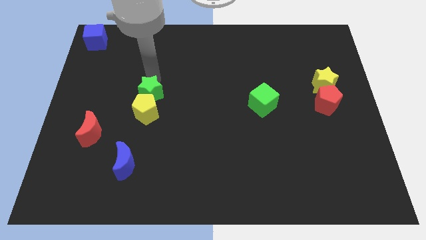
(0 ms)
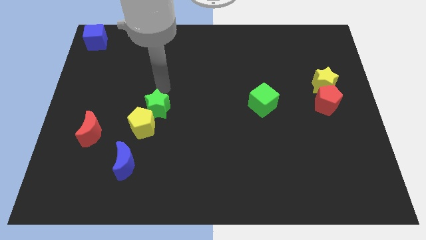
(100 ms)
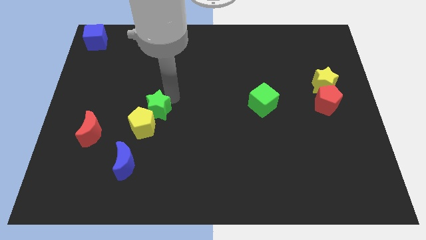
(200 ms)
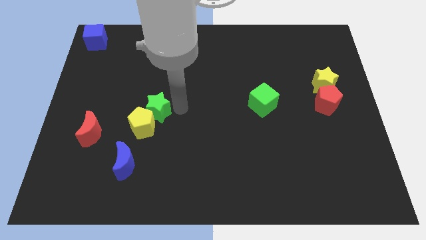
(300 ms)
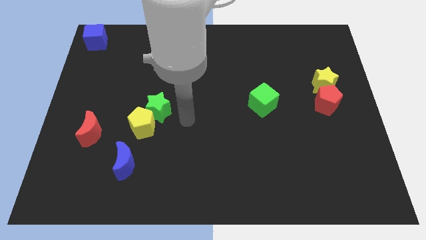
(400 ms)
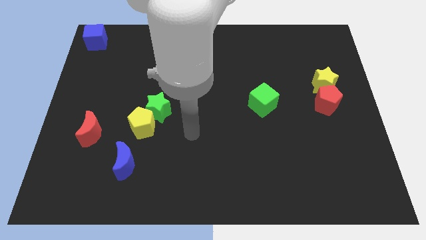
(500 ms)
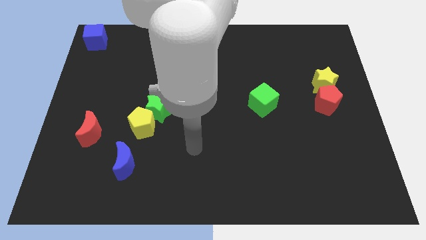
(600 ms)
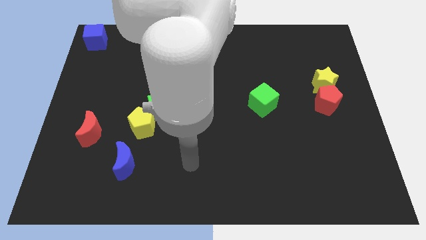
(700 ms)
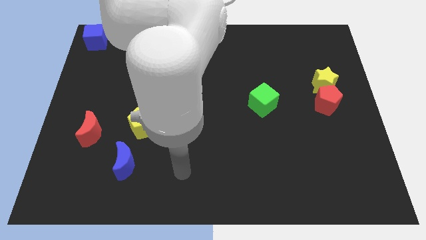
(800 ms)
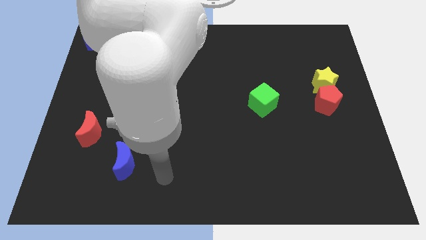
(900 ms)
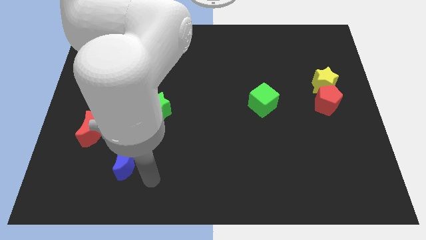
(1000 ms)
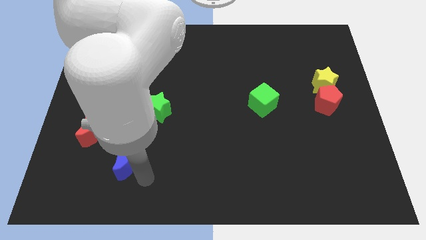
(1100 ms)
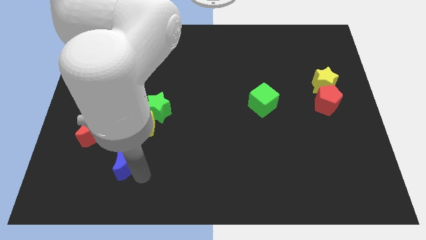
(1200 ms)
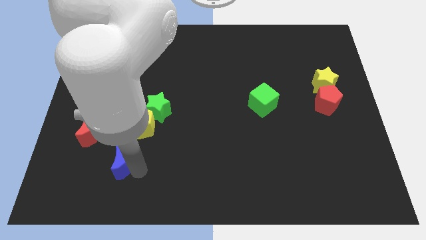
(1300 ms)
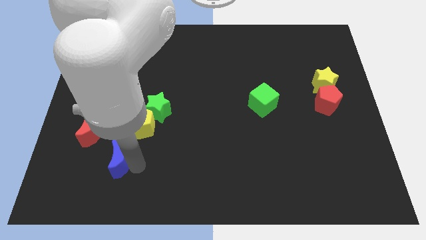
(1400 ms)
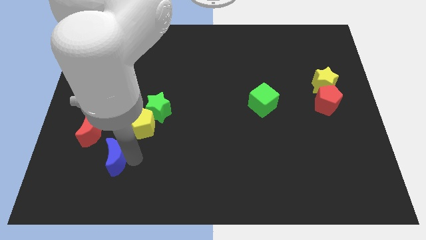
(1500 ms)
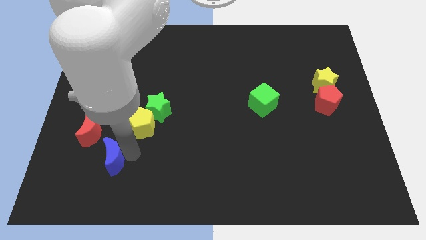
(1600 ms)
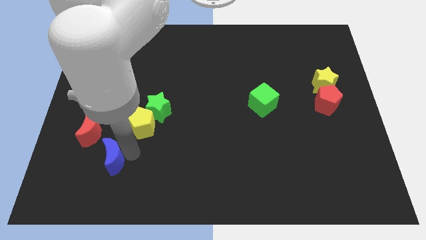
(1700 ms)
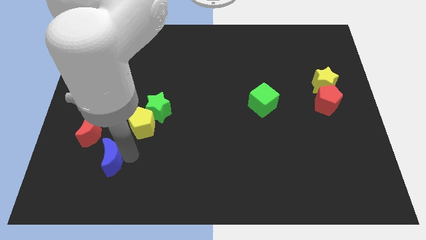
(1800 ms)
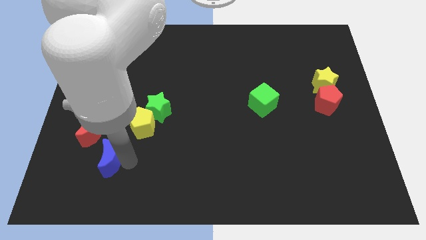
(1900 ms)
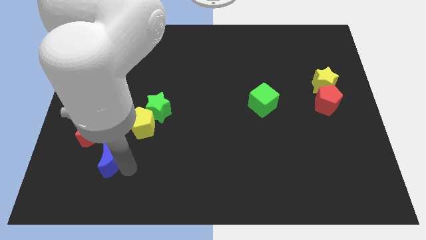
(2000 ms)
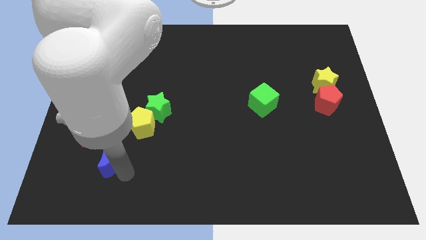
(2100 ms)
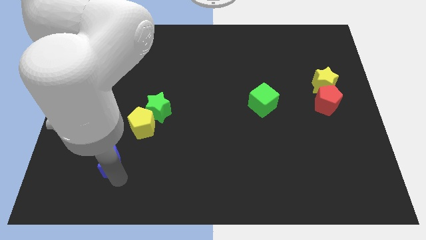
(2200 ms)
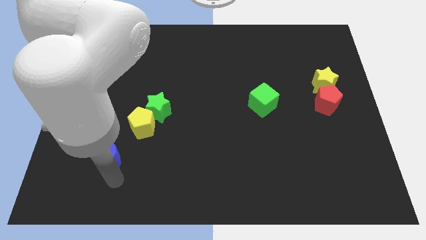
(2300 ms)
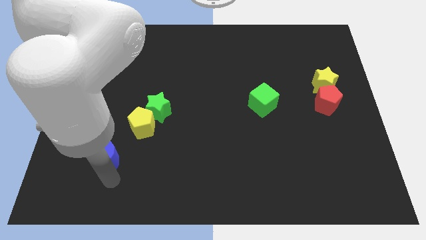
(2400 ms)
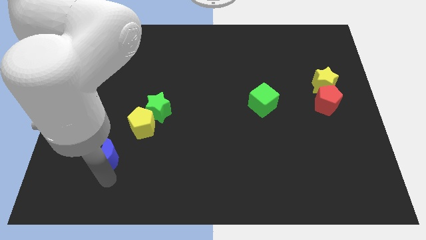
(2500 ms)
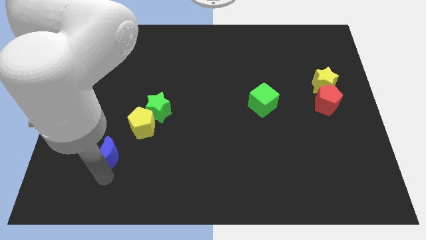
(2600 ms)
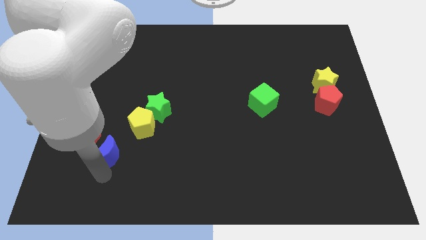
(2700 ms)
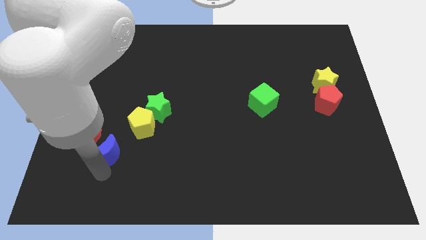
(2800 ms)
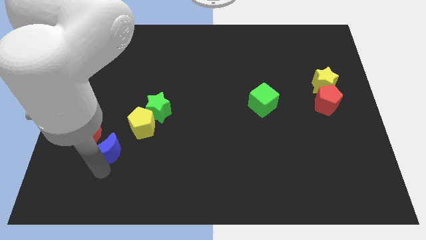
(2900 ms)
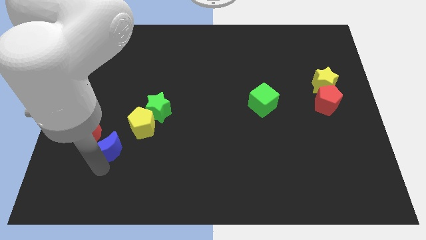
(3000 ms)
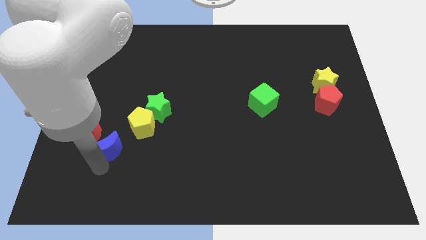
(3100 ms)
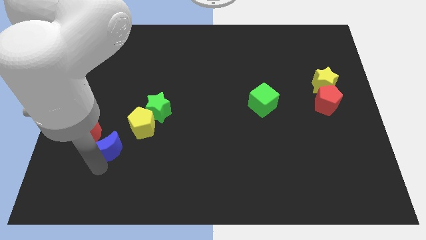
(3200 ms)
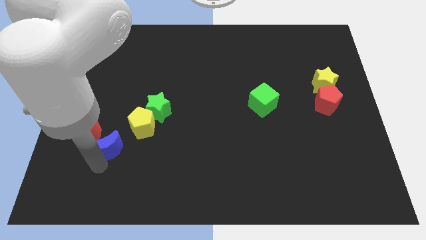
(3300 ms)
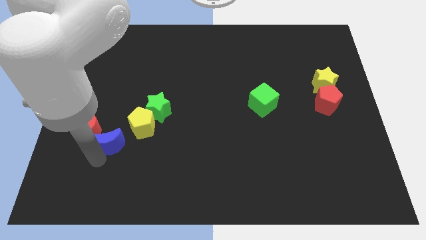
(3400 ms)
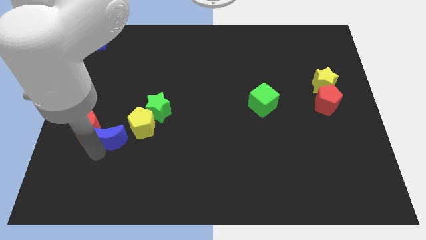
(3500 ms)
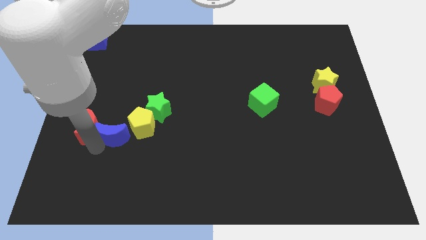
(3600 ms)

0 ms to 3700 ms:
move the blue moon between the yellow pentagon and red moon

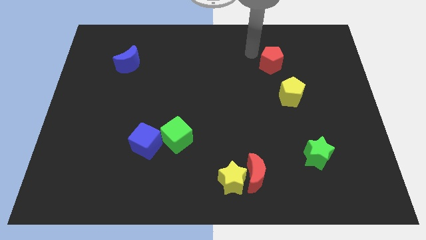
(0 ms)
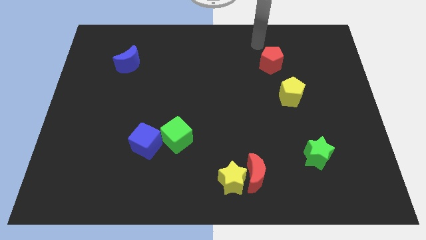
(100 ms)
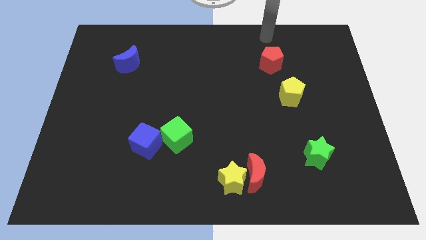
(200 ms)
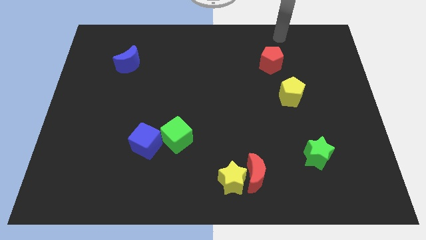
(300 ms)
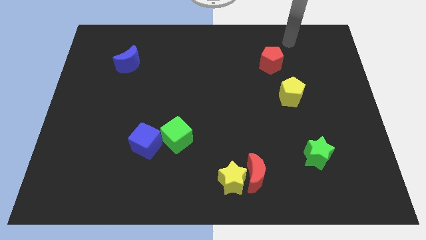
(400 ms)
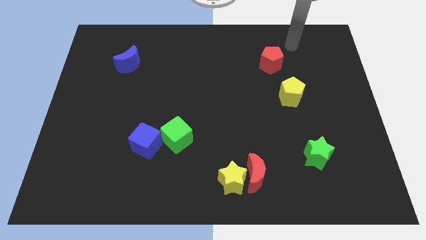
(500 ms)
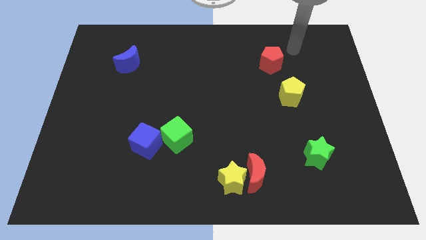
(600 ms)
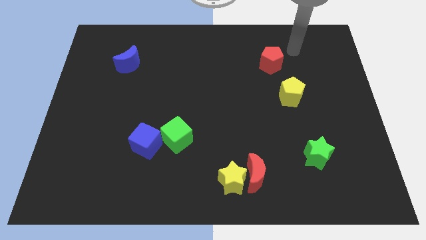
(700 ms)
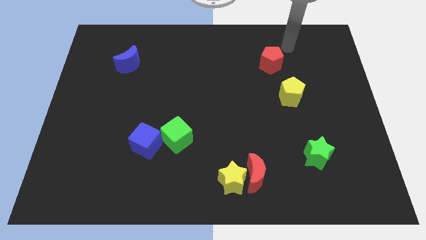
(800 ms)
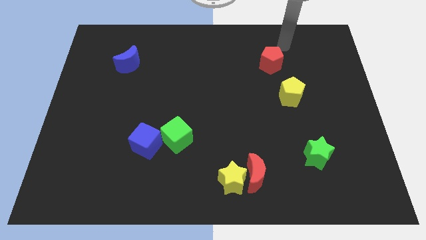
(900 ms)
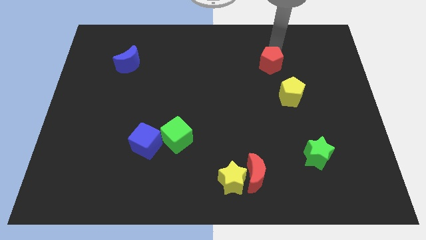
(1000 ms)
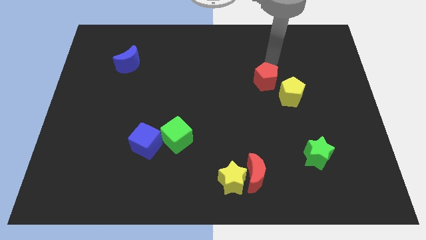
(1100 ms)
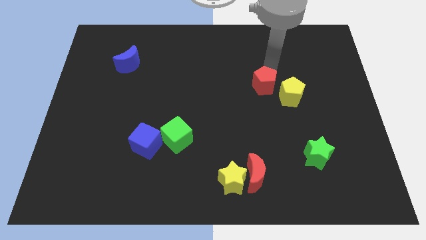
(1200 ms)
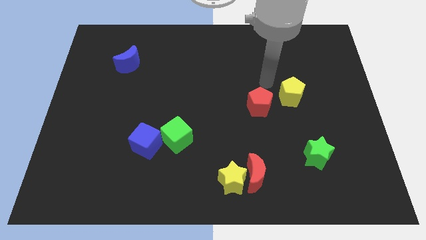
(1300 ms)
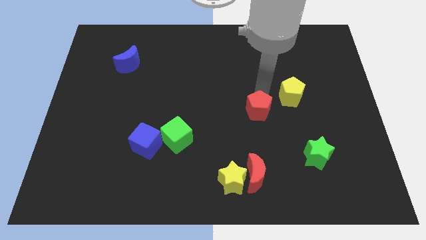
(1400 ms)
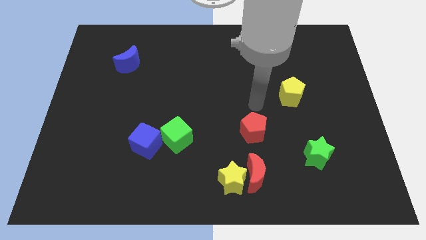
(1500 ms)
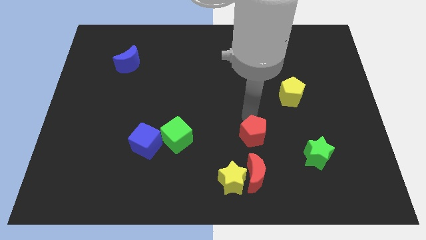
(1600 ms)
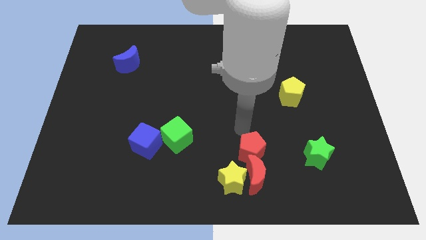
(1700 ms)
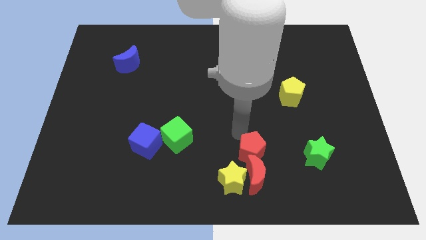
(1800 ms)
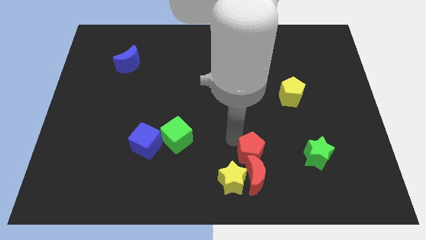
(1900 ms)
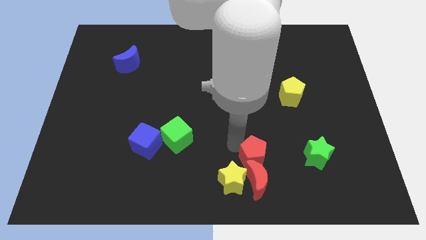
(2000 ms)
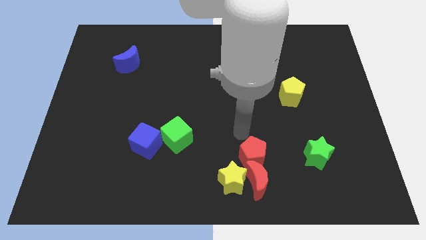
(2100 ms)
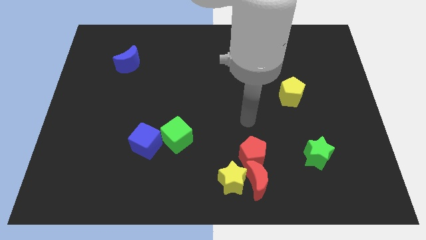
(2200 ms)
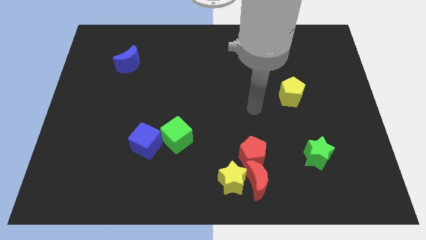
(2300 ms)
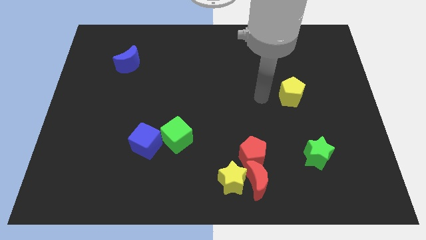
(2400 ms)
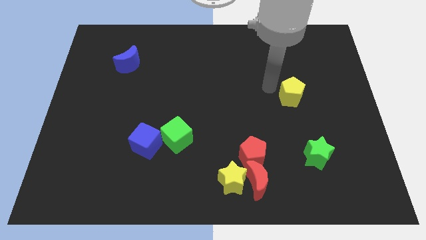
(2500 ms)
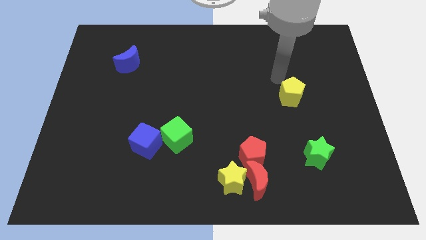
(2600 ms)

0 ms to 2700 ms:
move red pentagon into the red moon

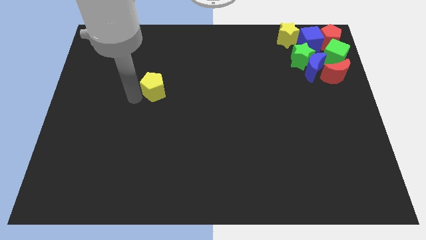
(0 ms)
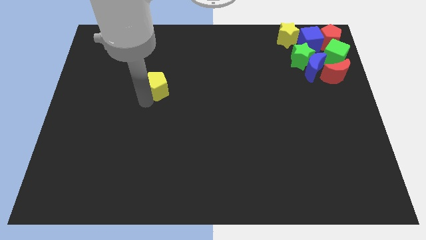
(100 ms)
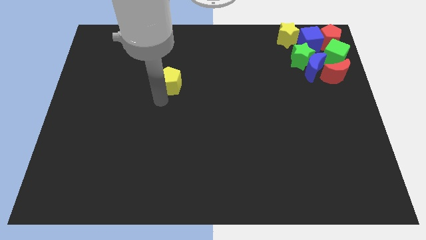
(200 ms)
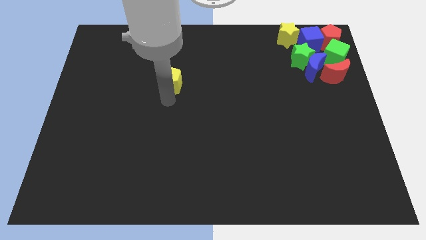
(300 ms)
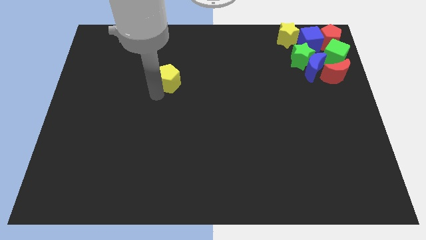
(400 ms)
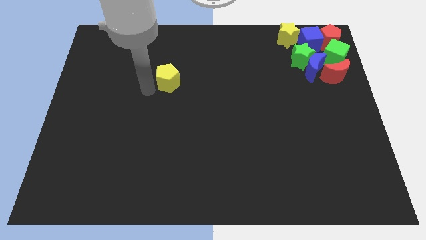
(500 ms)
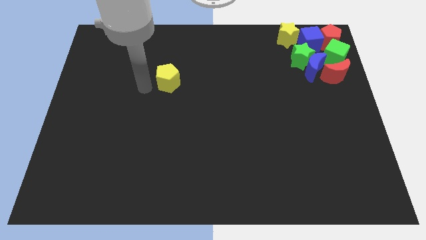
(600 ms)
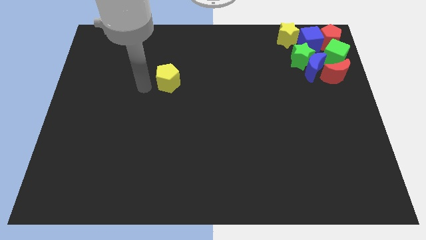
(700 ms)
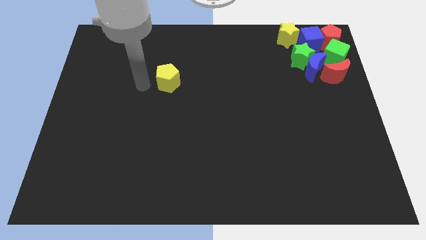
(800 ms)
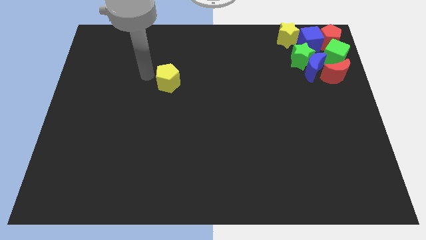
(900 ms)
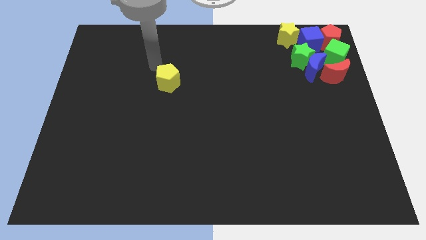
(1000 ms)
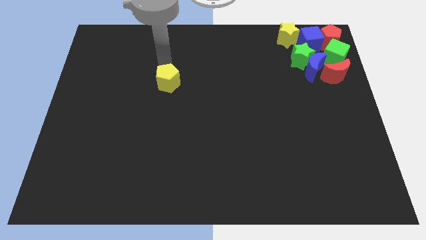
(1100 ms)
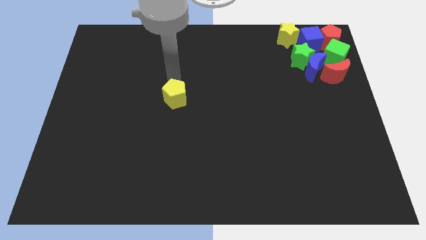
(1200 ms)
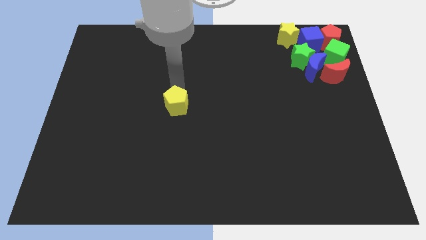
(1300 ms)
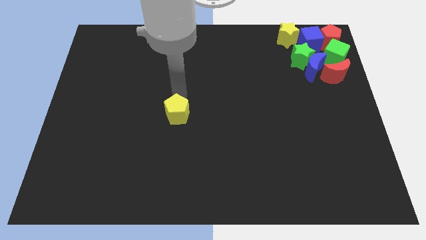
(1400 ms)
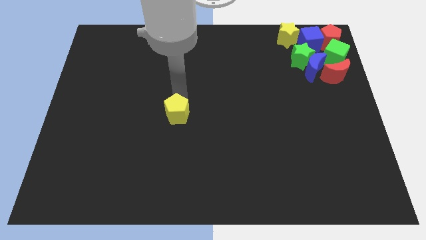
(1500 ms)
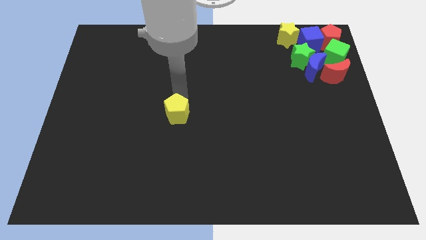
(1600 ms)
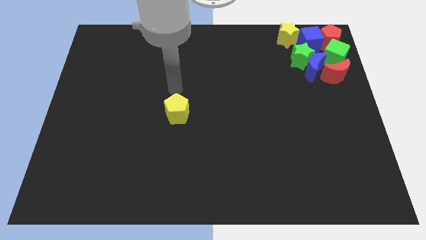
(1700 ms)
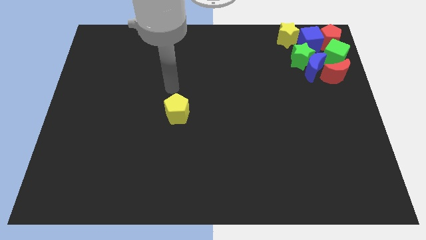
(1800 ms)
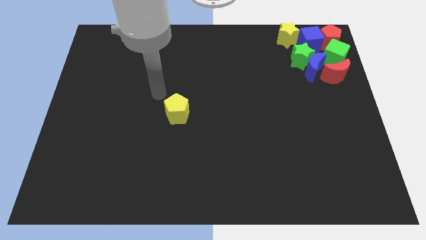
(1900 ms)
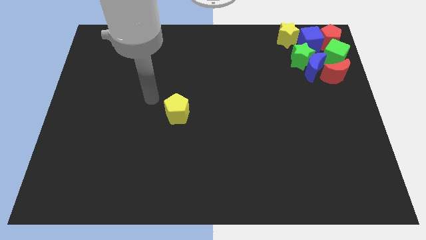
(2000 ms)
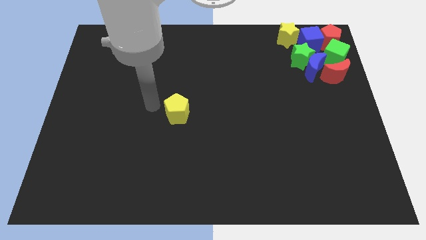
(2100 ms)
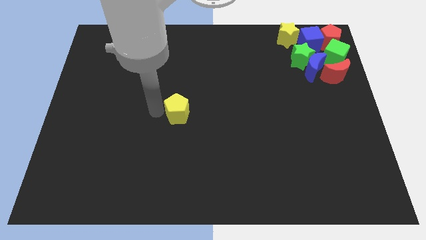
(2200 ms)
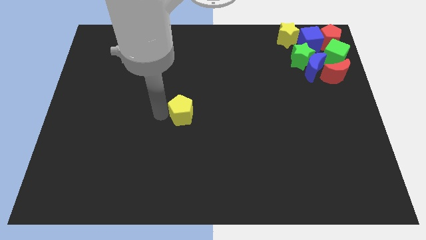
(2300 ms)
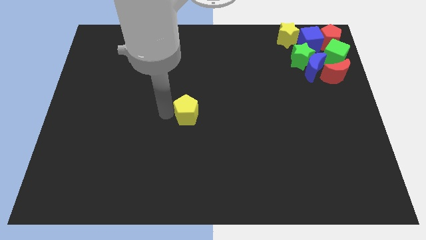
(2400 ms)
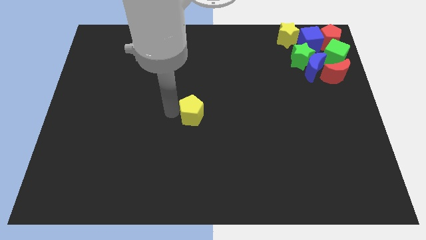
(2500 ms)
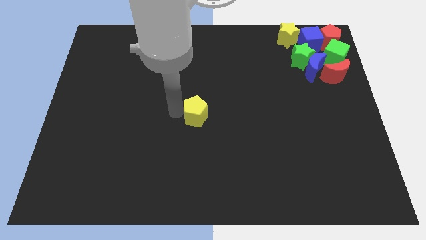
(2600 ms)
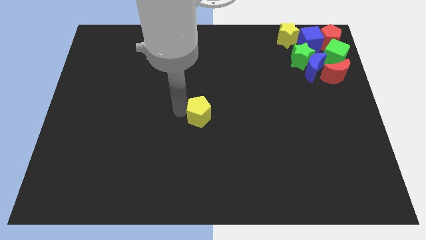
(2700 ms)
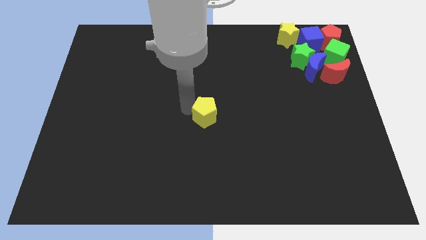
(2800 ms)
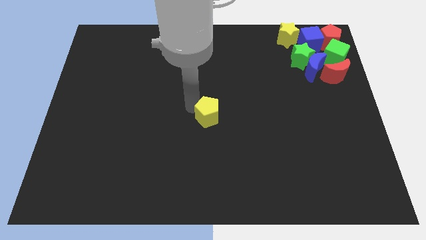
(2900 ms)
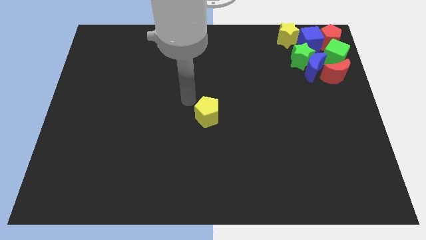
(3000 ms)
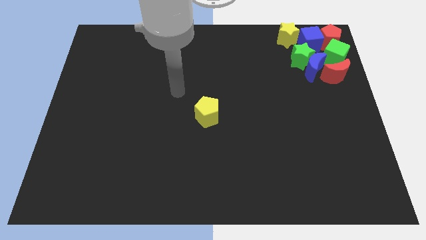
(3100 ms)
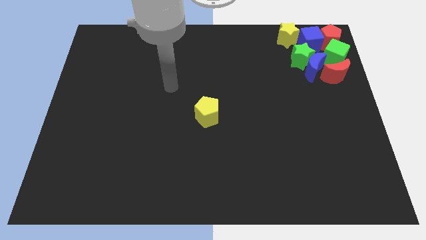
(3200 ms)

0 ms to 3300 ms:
drag the yellow star towards center
